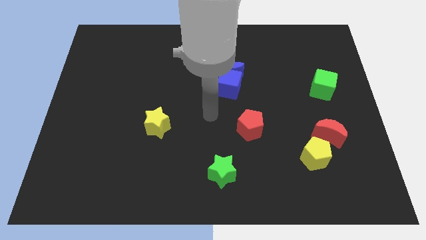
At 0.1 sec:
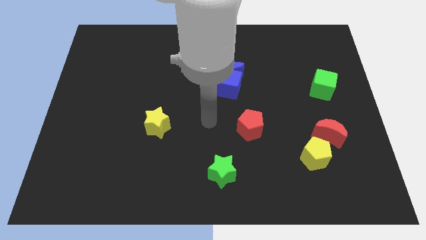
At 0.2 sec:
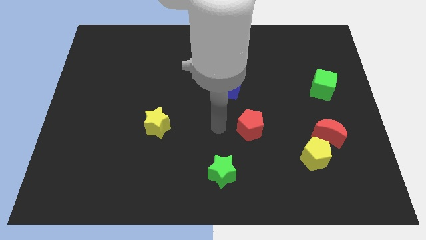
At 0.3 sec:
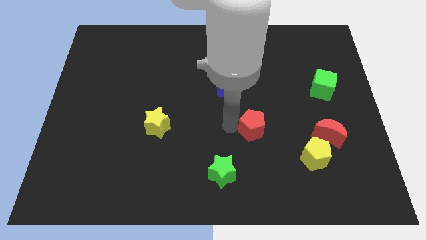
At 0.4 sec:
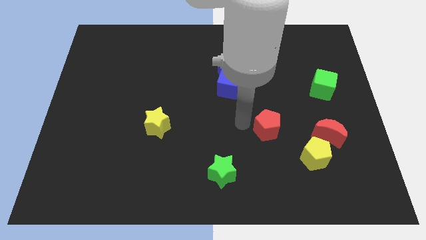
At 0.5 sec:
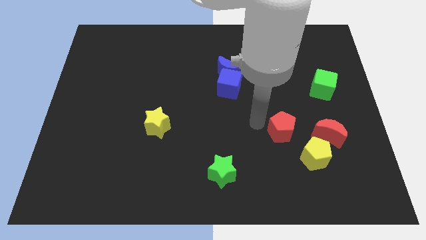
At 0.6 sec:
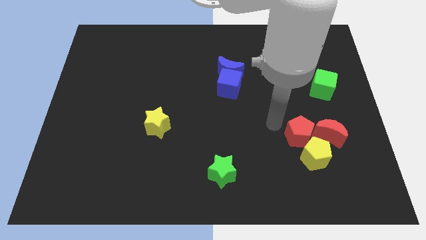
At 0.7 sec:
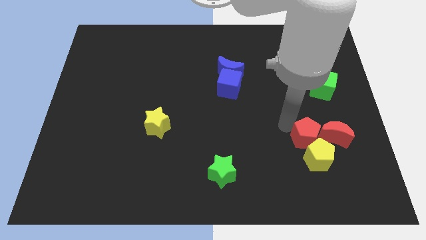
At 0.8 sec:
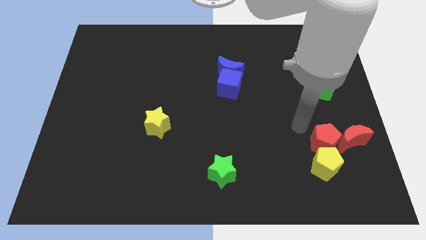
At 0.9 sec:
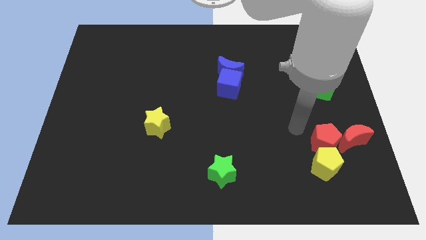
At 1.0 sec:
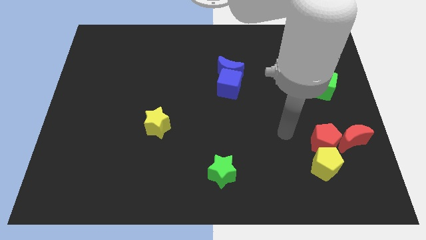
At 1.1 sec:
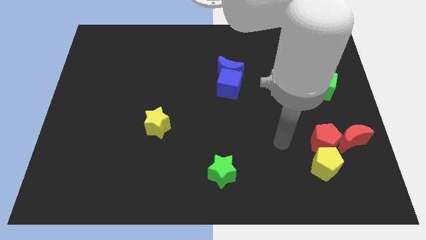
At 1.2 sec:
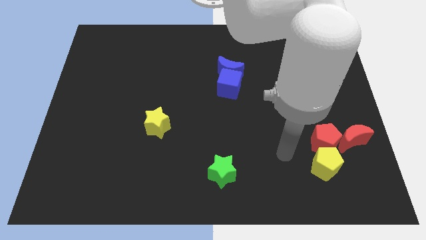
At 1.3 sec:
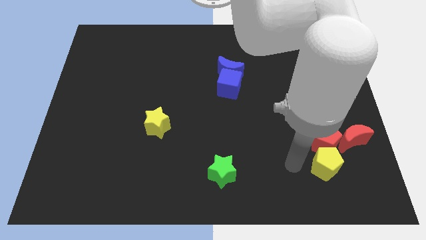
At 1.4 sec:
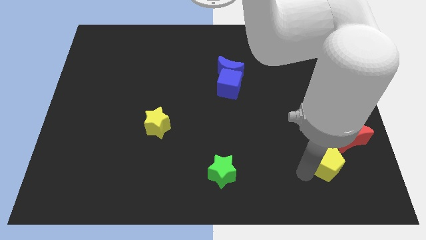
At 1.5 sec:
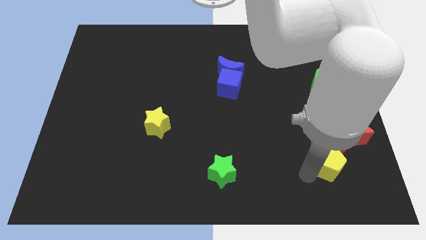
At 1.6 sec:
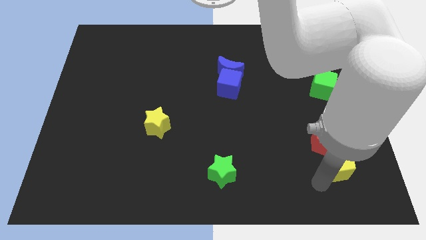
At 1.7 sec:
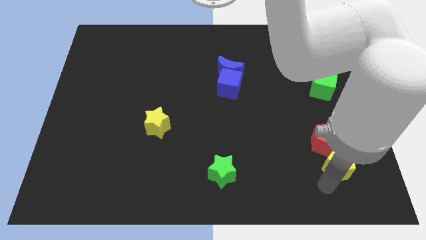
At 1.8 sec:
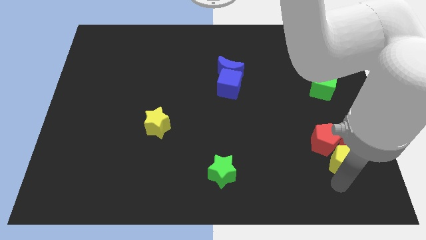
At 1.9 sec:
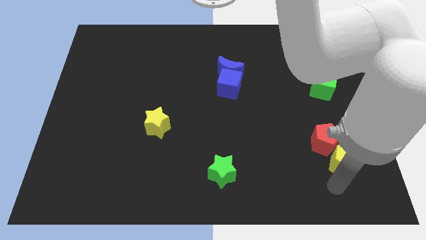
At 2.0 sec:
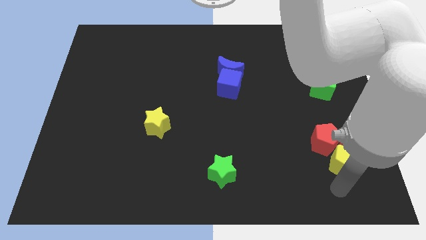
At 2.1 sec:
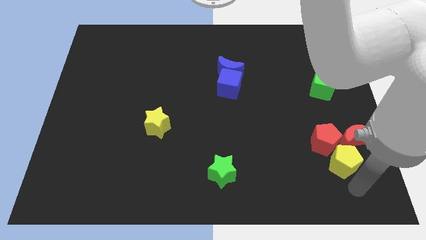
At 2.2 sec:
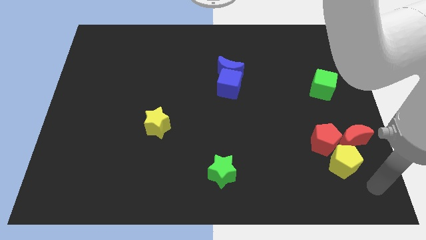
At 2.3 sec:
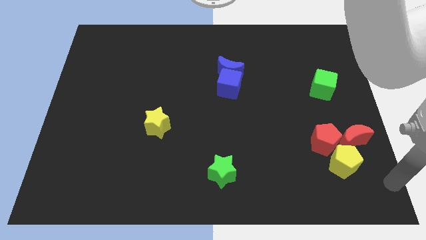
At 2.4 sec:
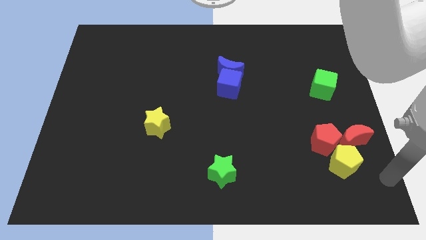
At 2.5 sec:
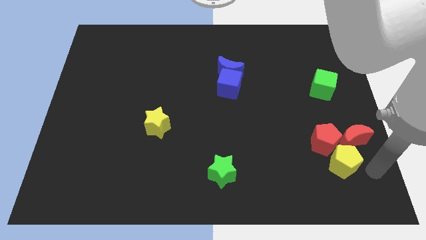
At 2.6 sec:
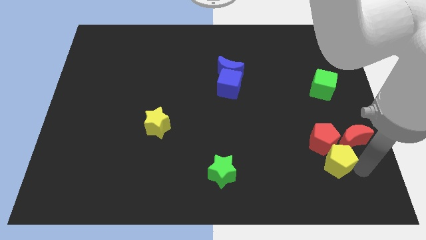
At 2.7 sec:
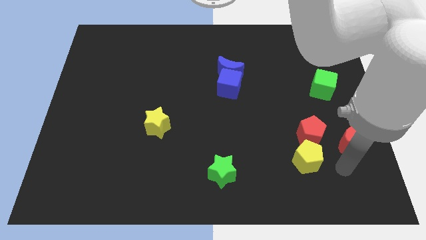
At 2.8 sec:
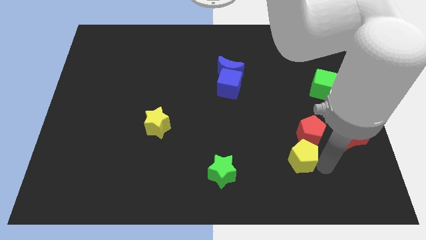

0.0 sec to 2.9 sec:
push red pentagon into red crescent

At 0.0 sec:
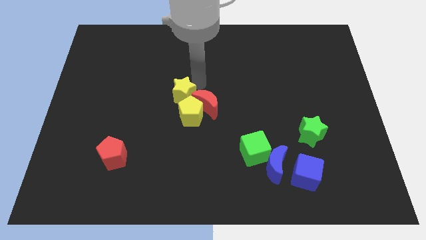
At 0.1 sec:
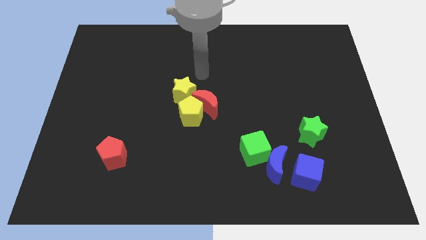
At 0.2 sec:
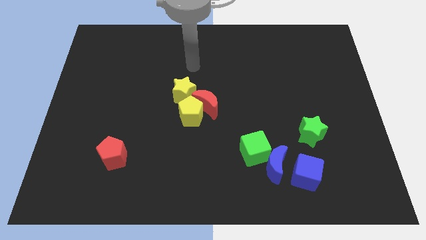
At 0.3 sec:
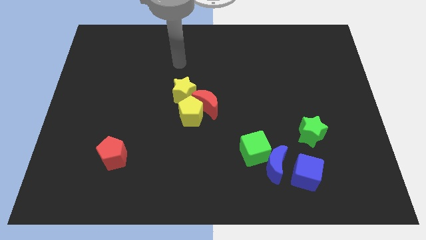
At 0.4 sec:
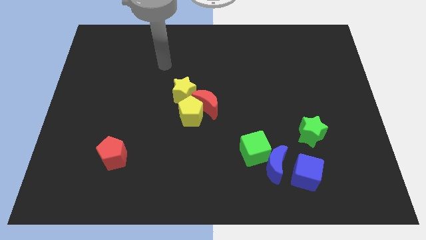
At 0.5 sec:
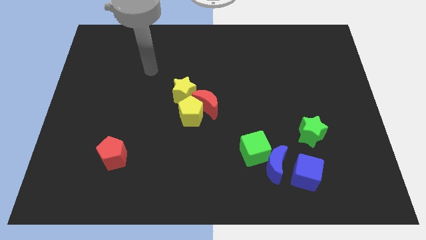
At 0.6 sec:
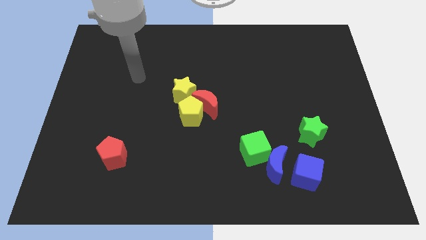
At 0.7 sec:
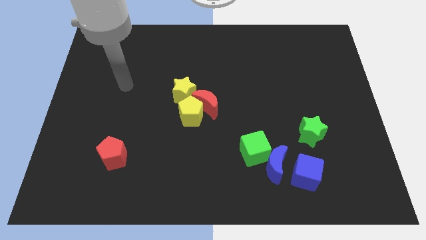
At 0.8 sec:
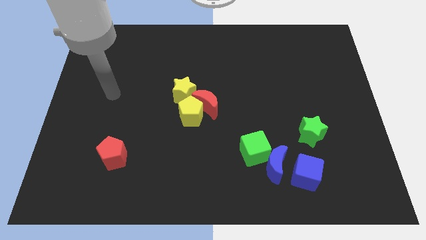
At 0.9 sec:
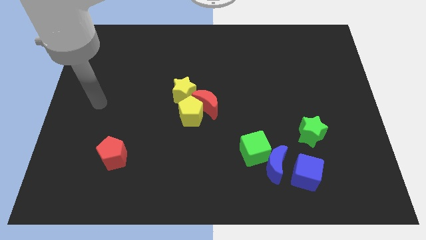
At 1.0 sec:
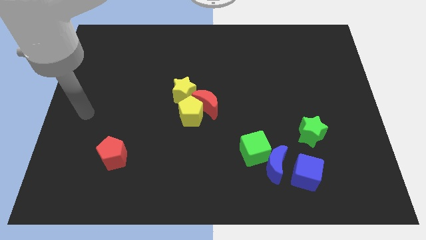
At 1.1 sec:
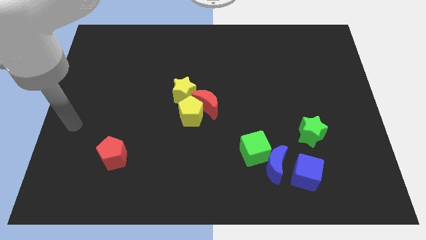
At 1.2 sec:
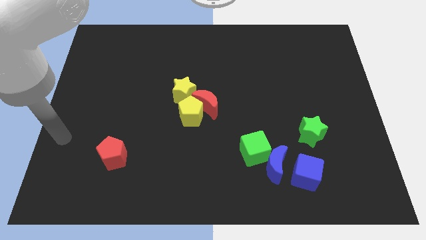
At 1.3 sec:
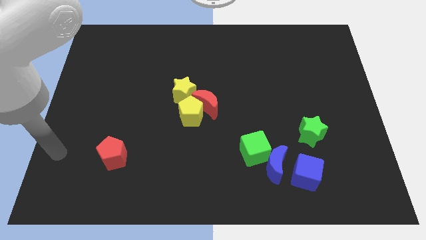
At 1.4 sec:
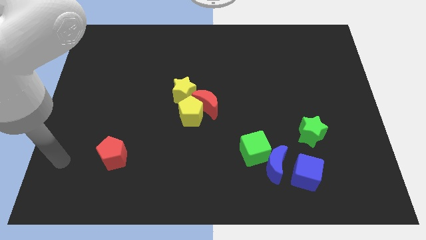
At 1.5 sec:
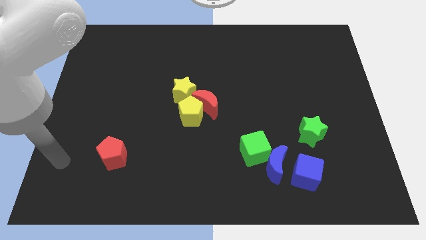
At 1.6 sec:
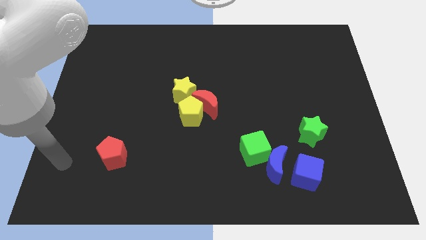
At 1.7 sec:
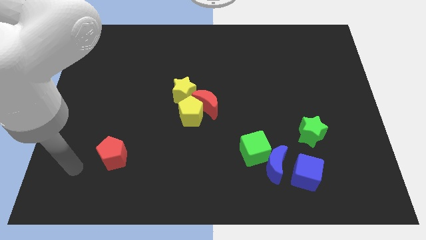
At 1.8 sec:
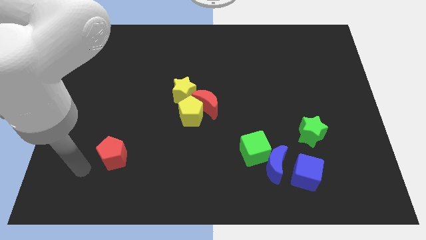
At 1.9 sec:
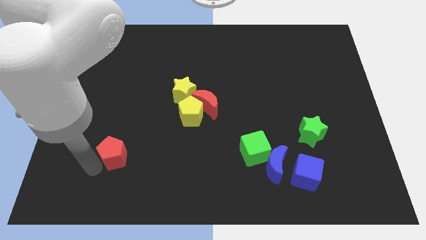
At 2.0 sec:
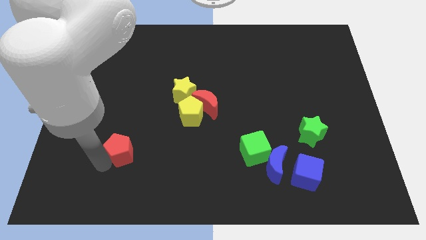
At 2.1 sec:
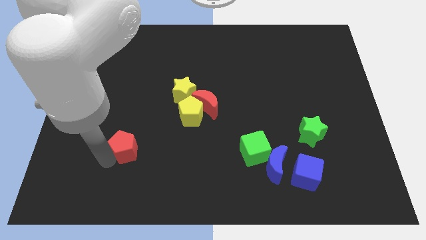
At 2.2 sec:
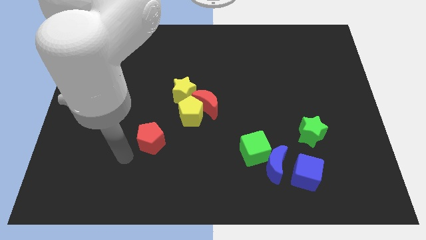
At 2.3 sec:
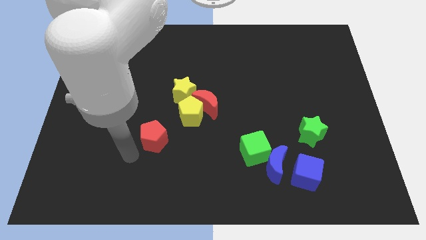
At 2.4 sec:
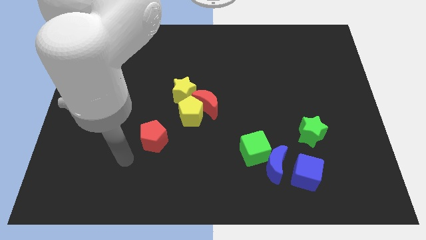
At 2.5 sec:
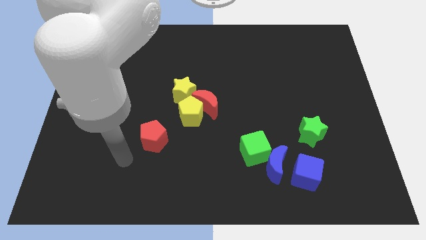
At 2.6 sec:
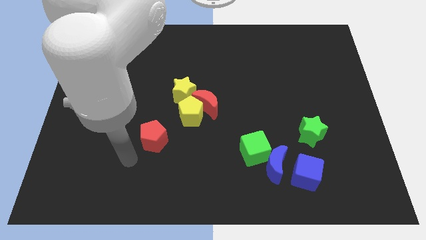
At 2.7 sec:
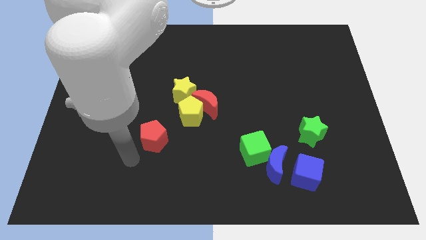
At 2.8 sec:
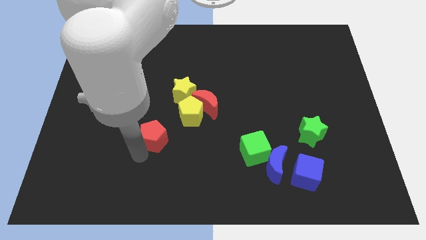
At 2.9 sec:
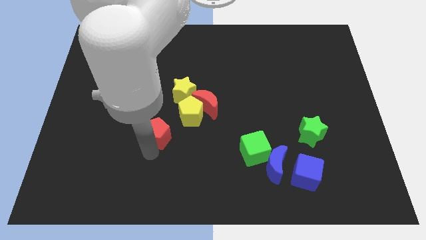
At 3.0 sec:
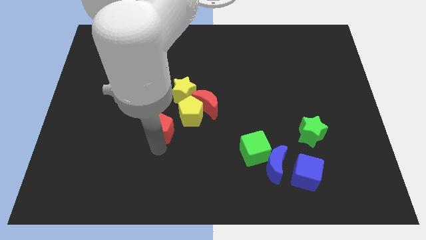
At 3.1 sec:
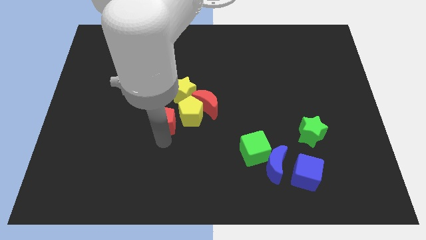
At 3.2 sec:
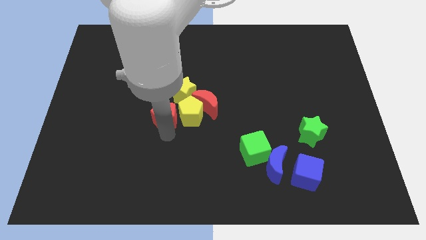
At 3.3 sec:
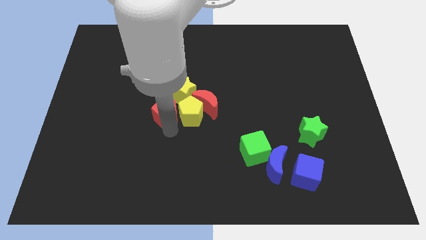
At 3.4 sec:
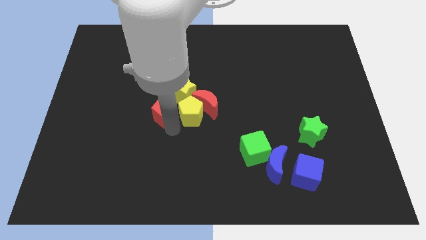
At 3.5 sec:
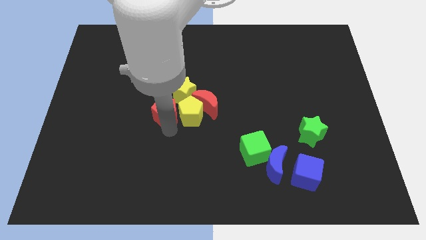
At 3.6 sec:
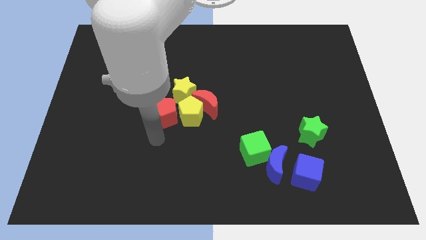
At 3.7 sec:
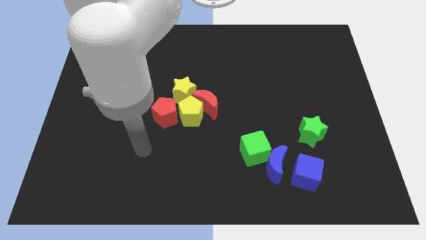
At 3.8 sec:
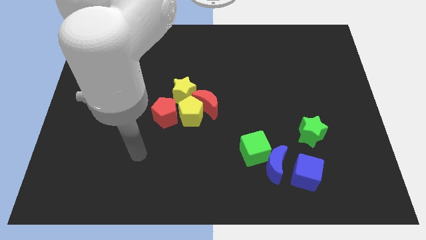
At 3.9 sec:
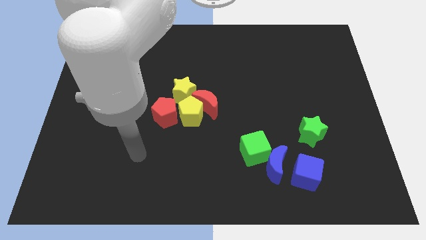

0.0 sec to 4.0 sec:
push red pentagon into group of blocks

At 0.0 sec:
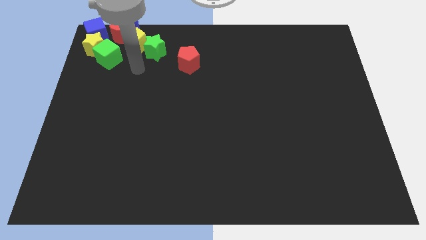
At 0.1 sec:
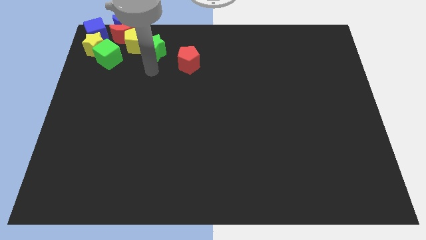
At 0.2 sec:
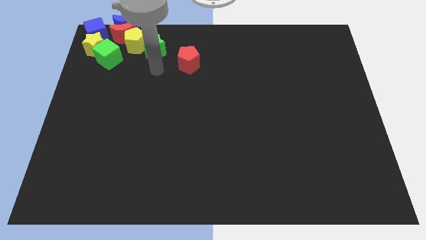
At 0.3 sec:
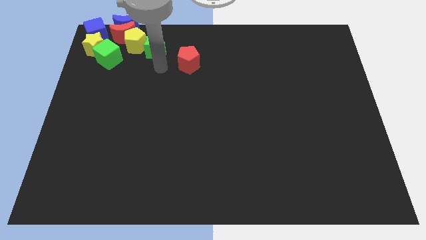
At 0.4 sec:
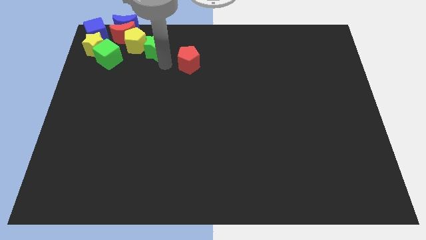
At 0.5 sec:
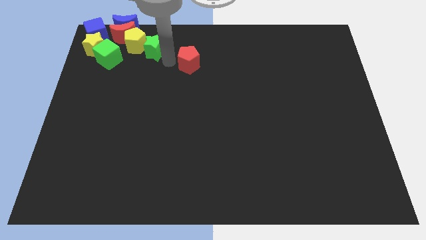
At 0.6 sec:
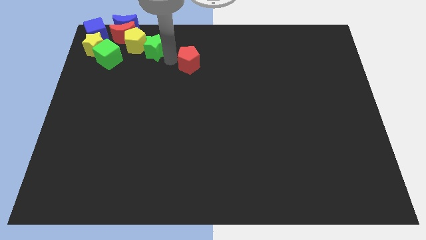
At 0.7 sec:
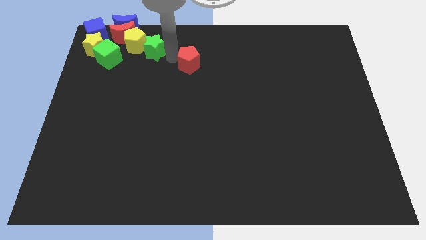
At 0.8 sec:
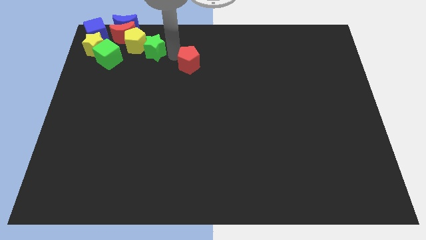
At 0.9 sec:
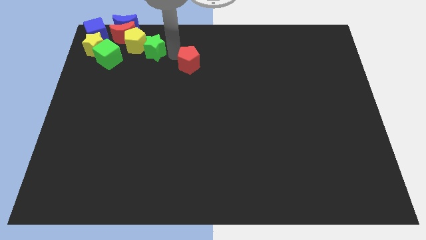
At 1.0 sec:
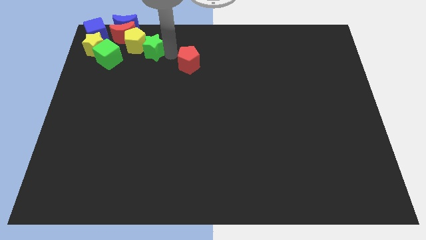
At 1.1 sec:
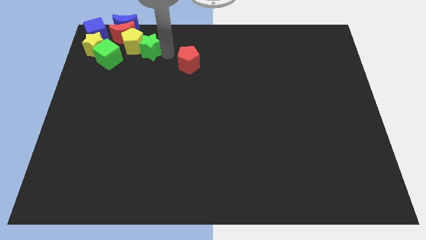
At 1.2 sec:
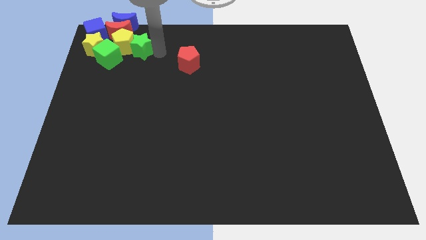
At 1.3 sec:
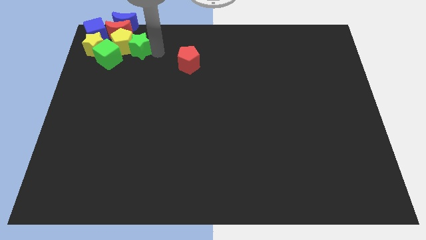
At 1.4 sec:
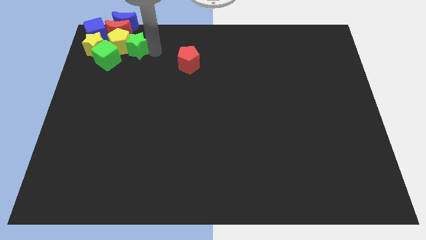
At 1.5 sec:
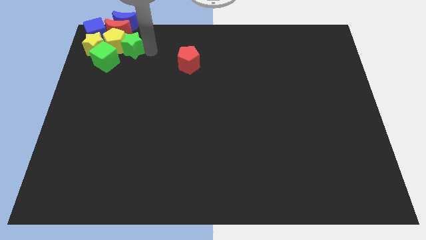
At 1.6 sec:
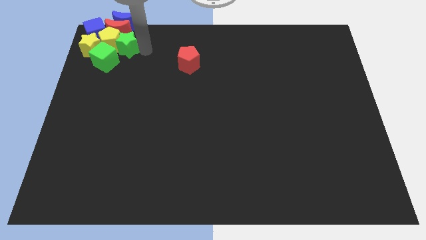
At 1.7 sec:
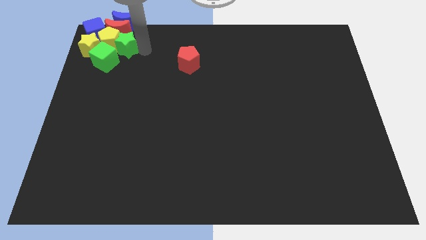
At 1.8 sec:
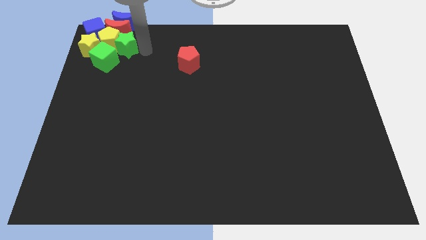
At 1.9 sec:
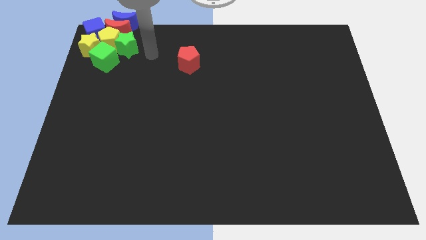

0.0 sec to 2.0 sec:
push green star into yellow pentagon
